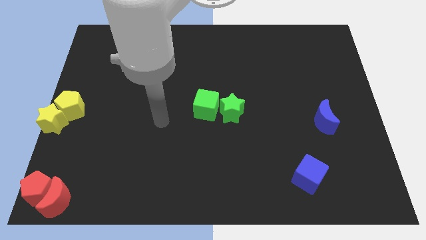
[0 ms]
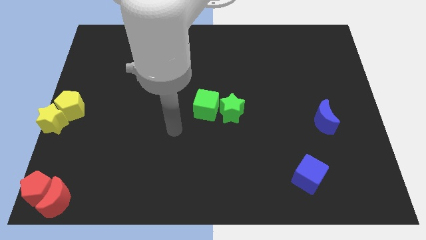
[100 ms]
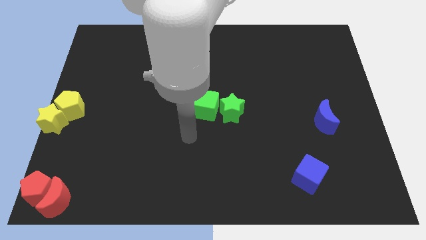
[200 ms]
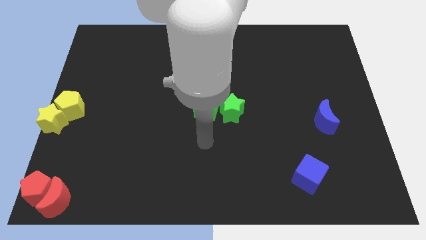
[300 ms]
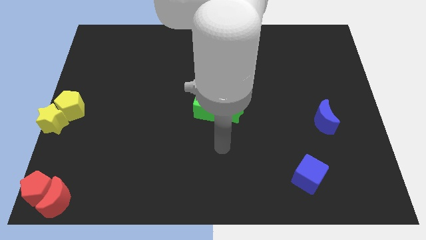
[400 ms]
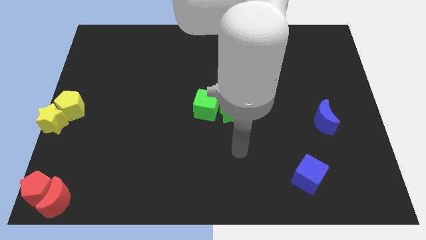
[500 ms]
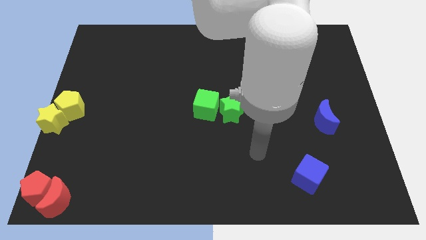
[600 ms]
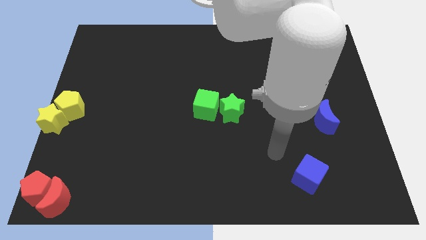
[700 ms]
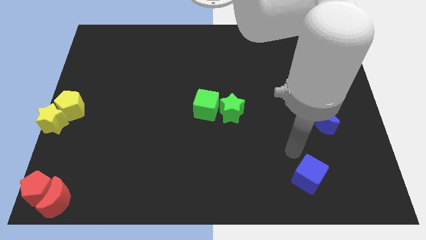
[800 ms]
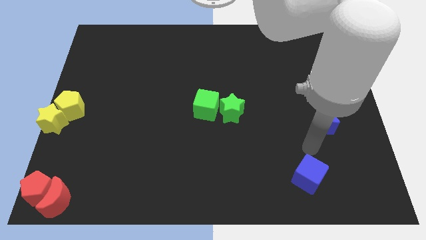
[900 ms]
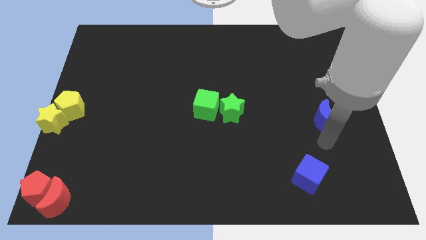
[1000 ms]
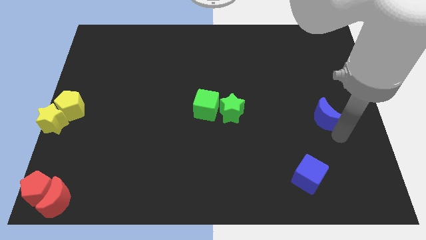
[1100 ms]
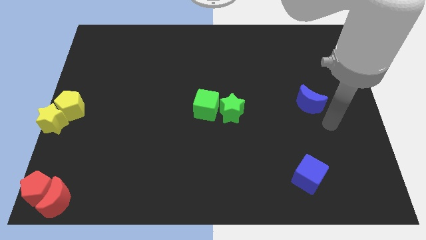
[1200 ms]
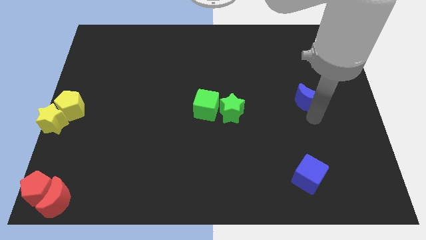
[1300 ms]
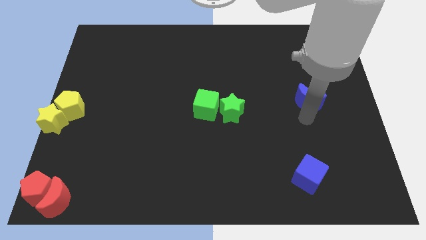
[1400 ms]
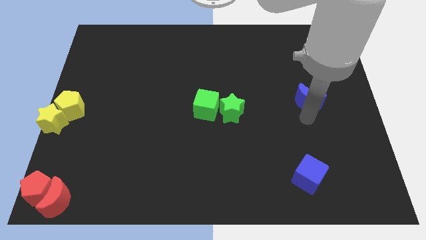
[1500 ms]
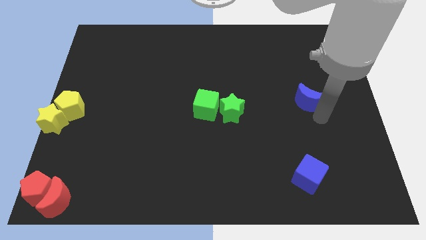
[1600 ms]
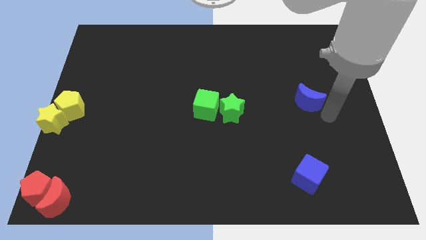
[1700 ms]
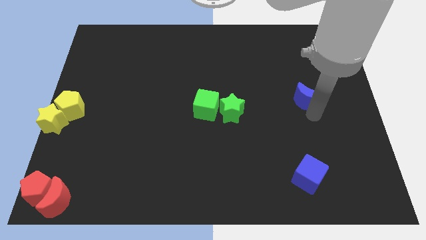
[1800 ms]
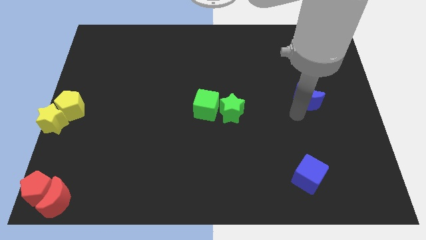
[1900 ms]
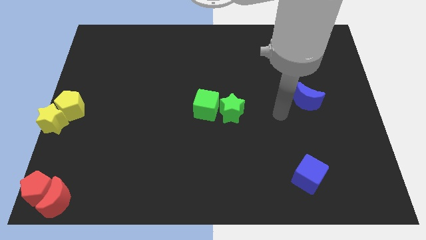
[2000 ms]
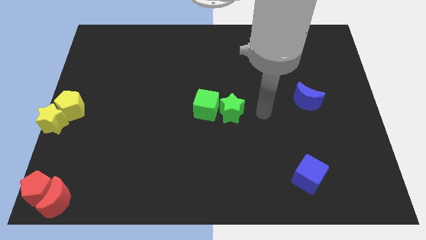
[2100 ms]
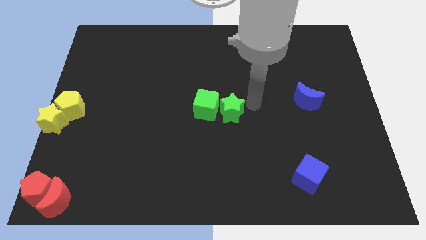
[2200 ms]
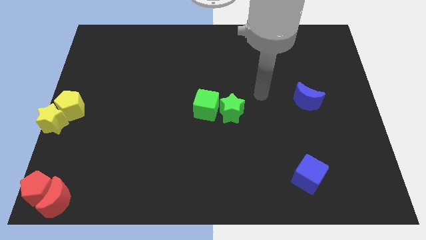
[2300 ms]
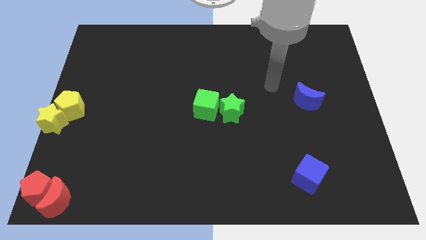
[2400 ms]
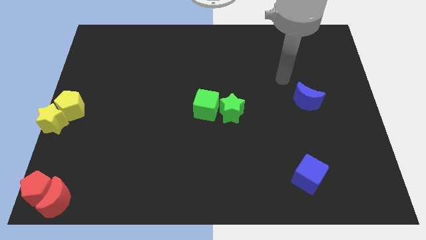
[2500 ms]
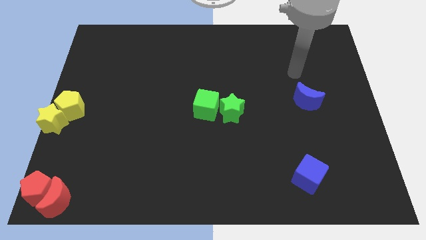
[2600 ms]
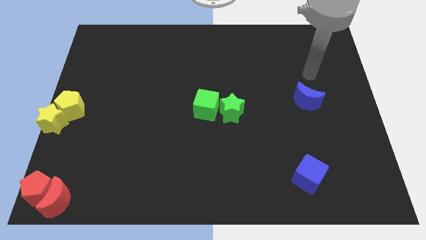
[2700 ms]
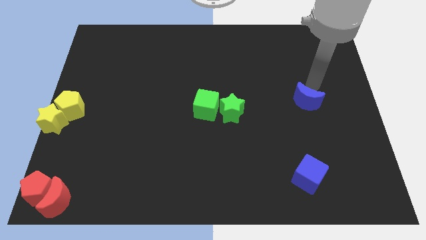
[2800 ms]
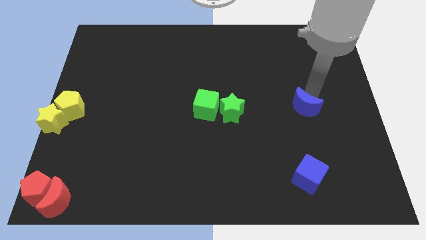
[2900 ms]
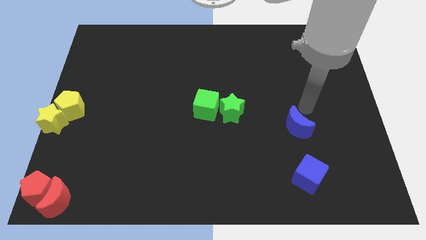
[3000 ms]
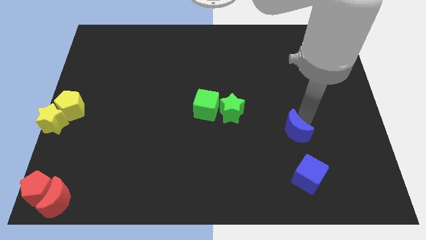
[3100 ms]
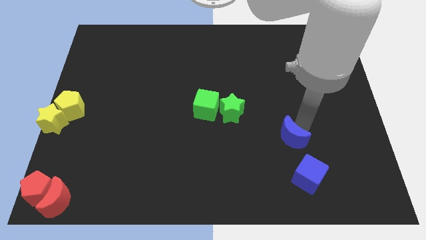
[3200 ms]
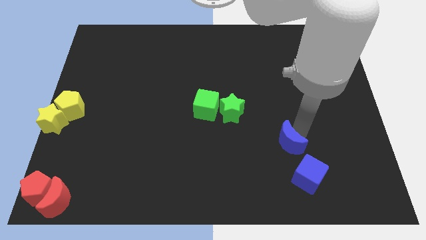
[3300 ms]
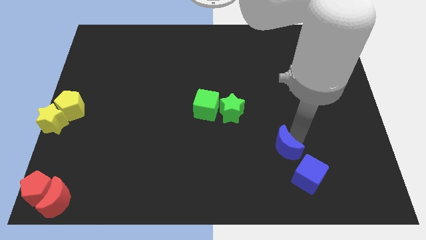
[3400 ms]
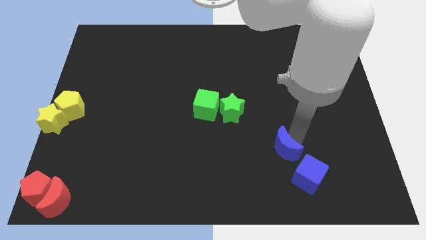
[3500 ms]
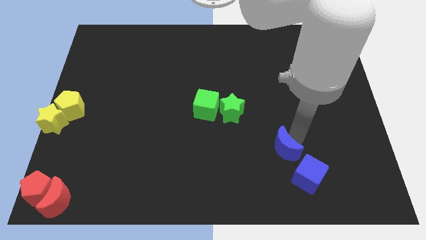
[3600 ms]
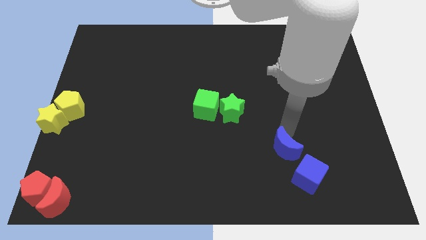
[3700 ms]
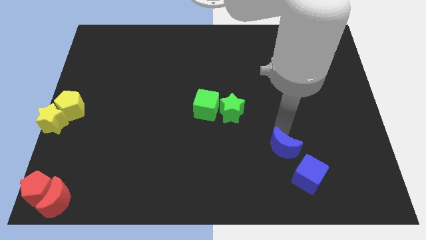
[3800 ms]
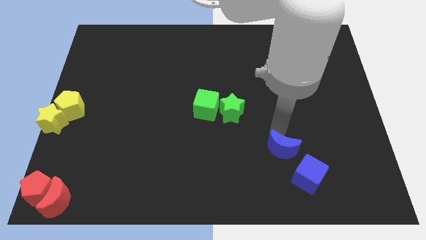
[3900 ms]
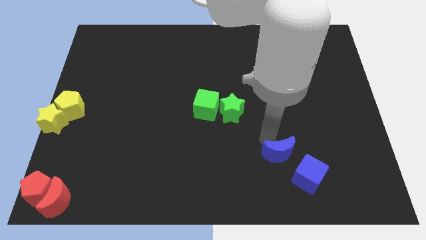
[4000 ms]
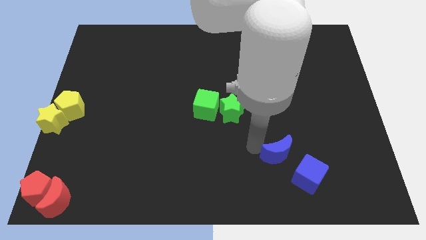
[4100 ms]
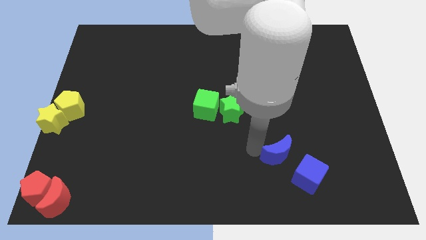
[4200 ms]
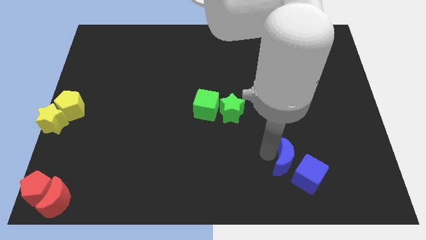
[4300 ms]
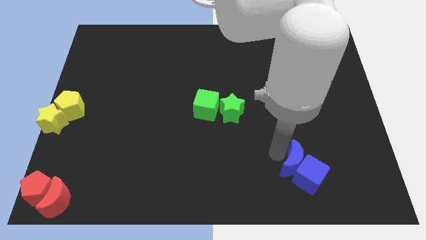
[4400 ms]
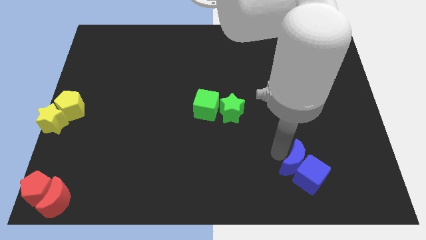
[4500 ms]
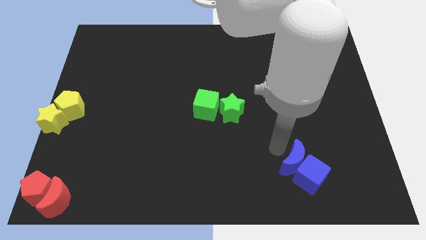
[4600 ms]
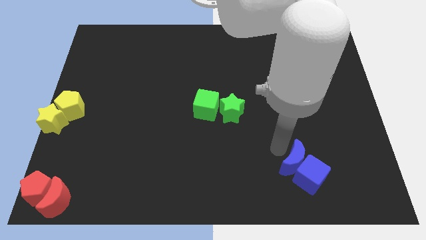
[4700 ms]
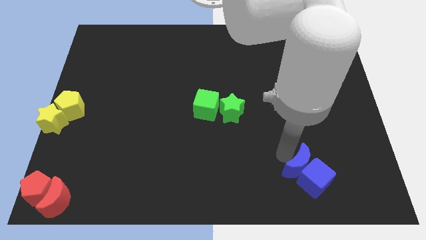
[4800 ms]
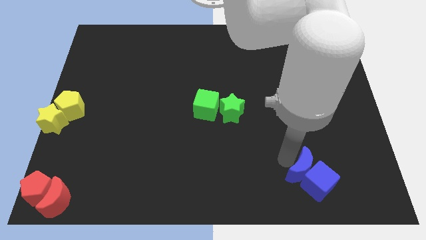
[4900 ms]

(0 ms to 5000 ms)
push the blue moon into the blue cube

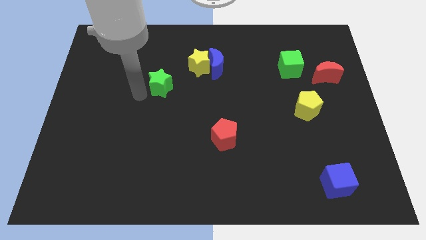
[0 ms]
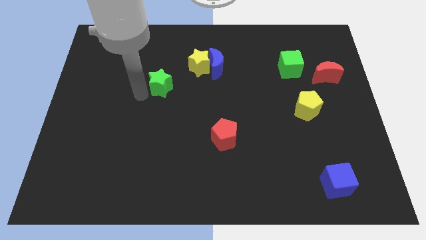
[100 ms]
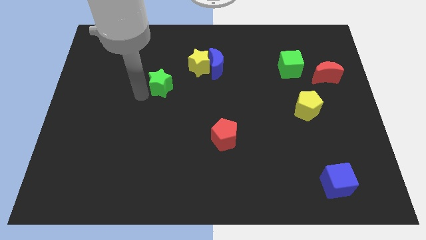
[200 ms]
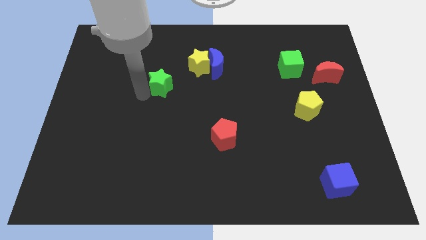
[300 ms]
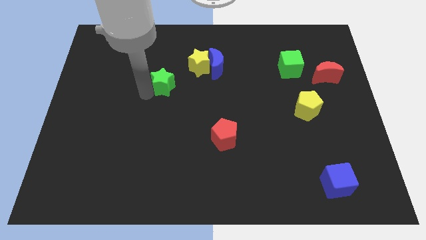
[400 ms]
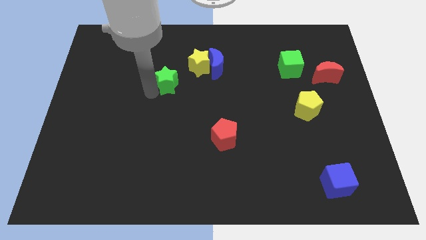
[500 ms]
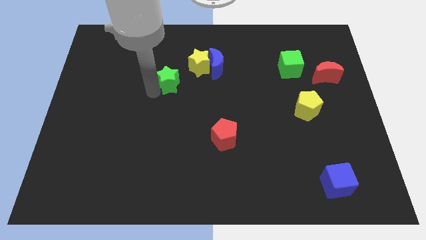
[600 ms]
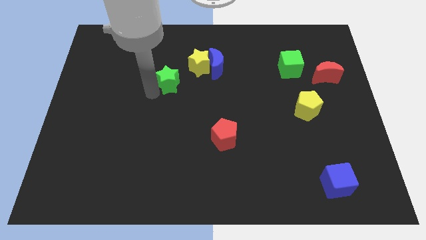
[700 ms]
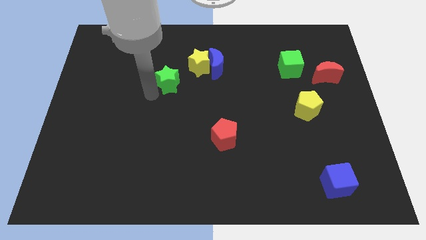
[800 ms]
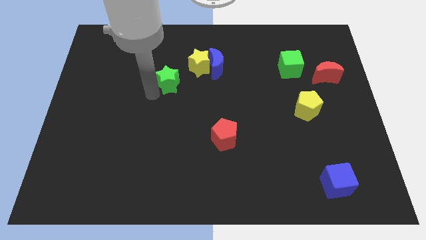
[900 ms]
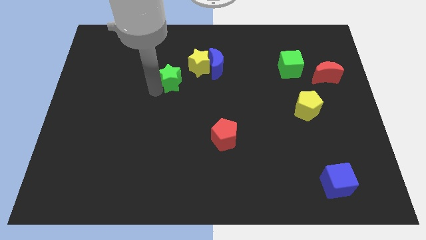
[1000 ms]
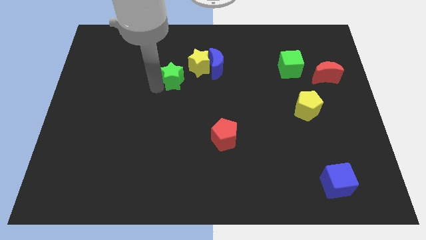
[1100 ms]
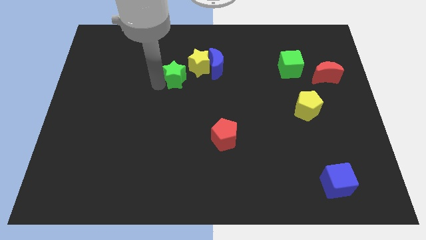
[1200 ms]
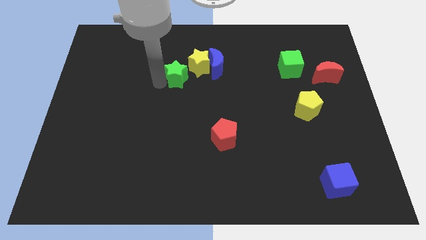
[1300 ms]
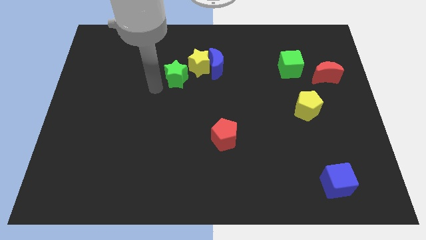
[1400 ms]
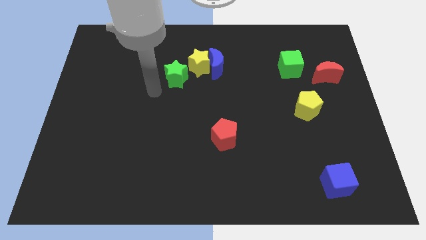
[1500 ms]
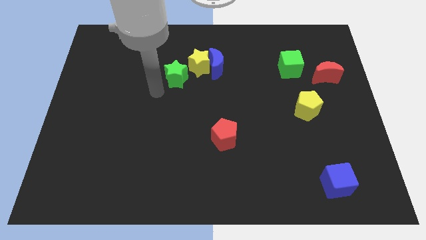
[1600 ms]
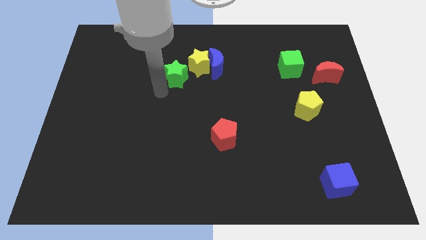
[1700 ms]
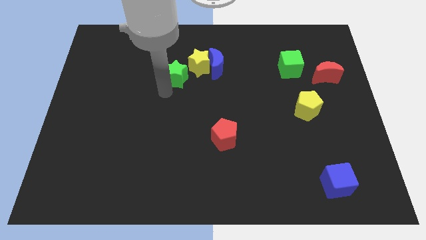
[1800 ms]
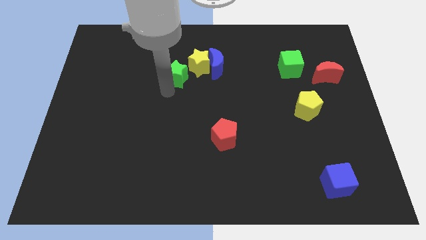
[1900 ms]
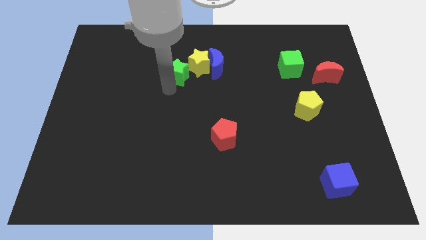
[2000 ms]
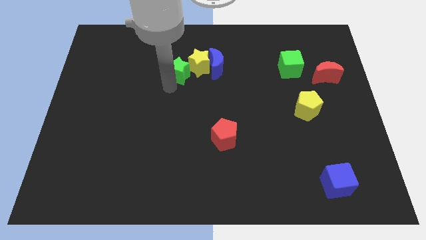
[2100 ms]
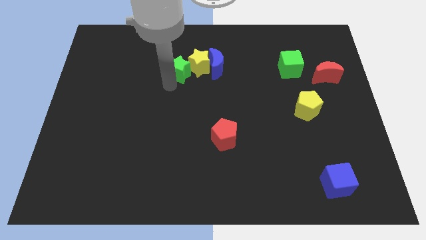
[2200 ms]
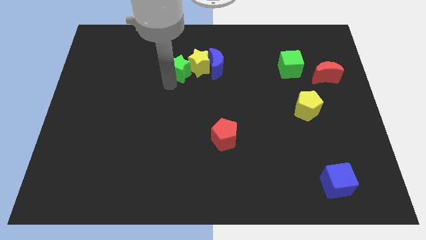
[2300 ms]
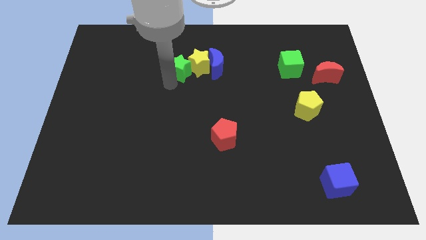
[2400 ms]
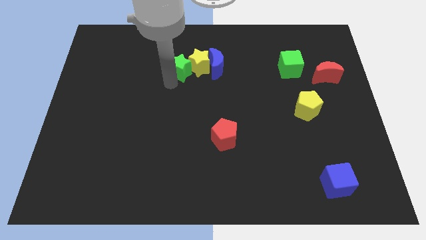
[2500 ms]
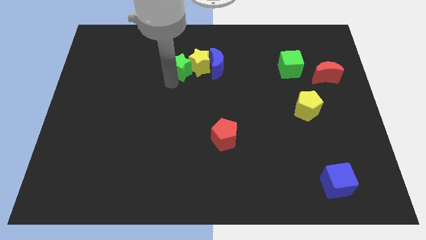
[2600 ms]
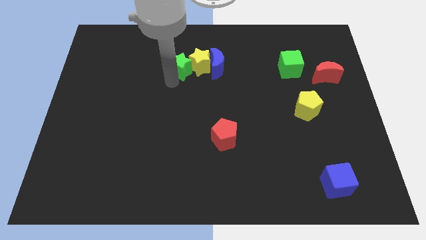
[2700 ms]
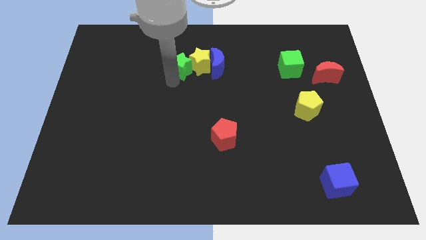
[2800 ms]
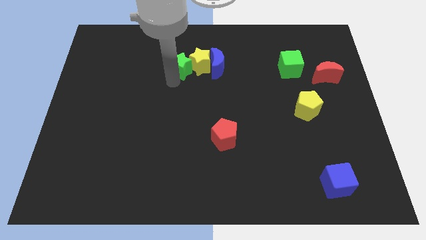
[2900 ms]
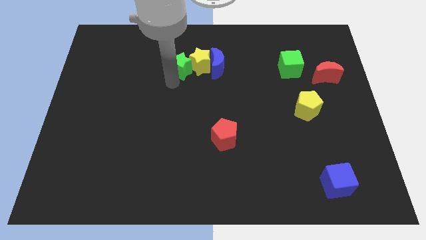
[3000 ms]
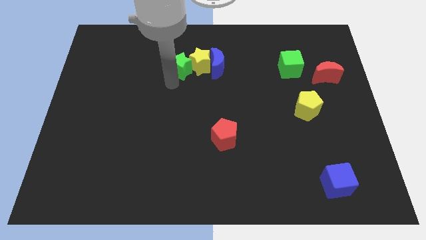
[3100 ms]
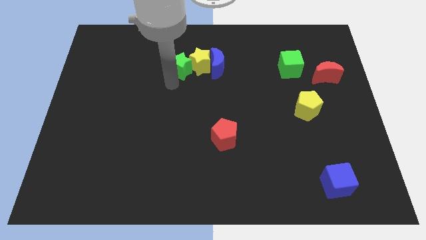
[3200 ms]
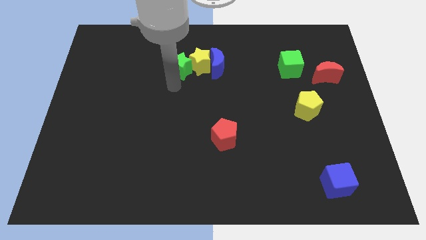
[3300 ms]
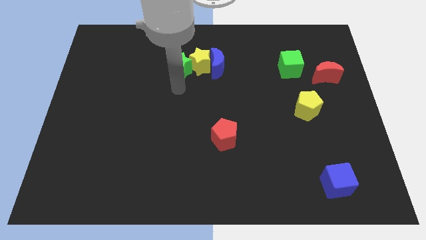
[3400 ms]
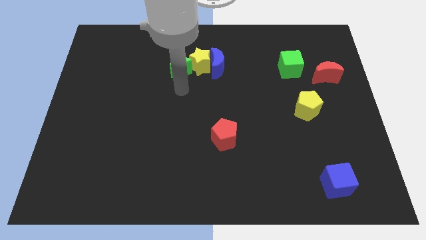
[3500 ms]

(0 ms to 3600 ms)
move the green star left to the yellow star

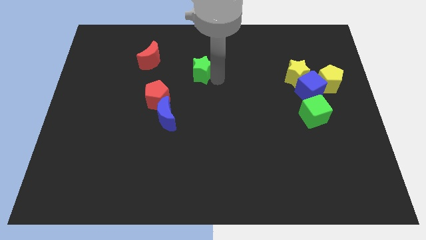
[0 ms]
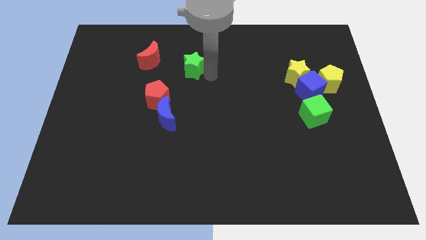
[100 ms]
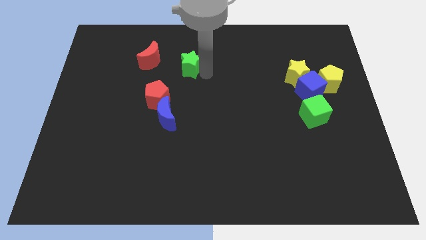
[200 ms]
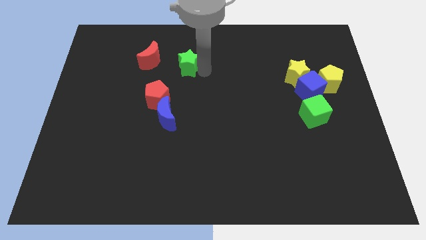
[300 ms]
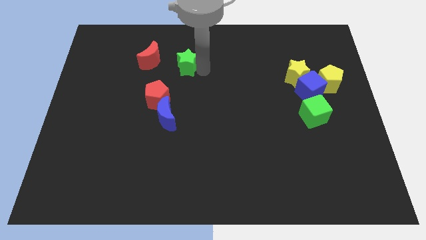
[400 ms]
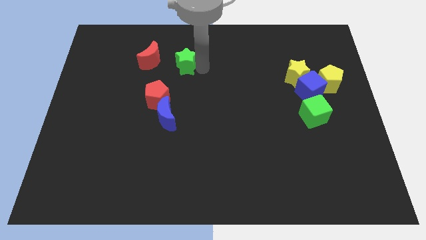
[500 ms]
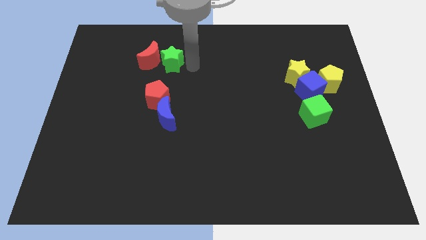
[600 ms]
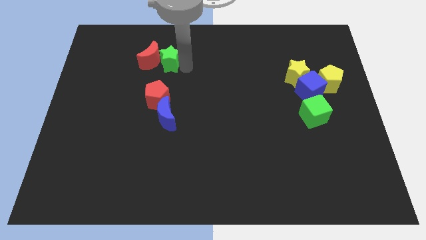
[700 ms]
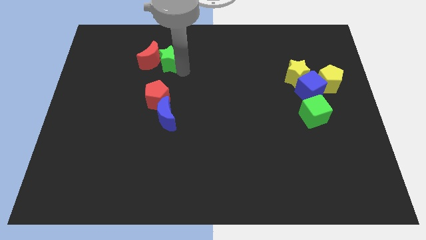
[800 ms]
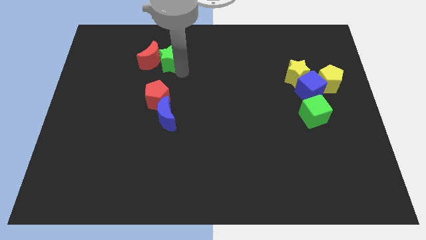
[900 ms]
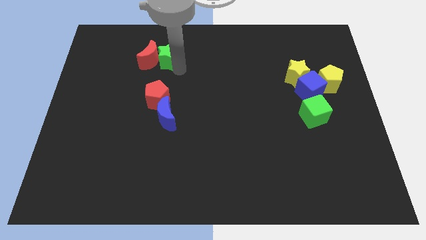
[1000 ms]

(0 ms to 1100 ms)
move green star into the red moon
